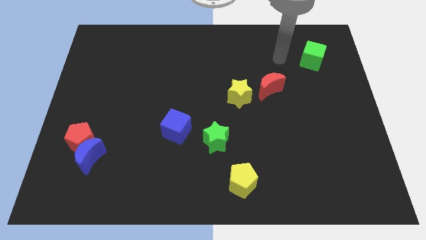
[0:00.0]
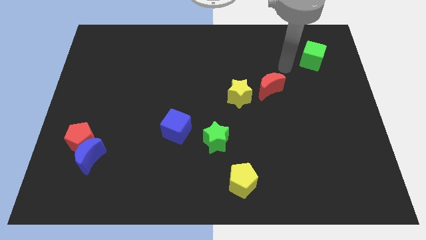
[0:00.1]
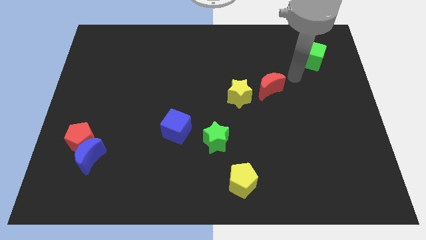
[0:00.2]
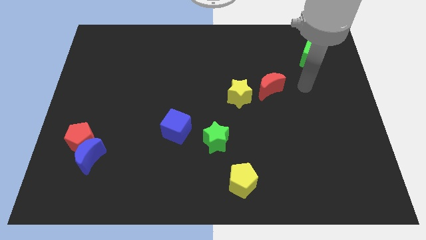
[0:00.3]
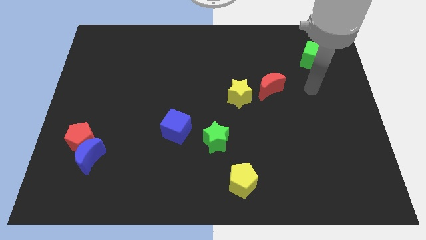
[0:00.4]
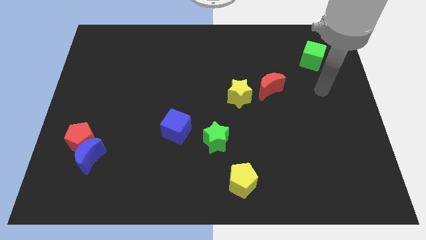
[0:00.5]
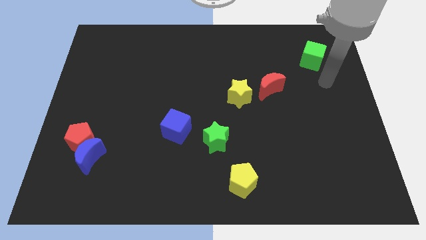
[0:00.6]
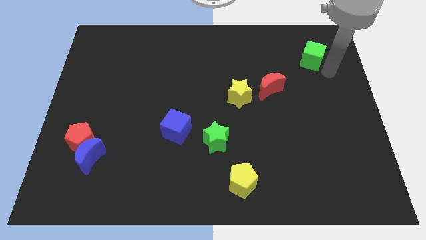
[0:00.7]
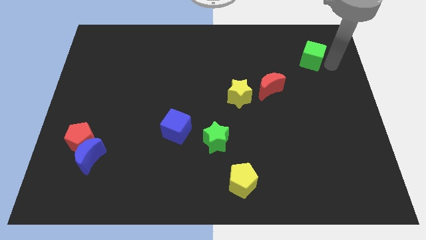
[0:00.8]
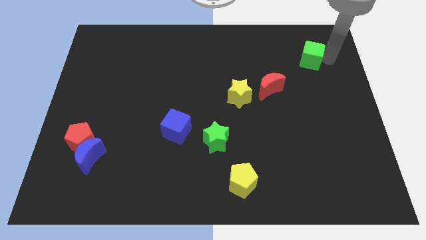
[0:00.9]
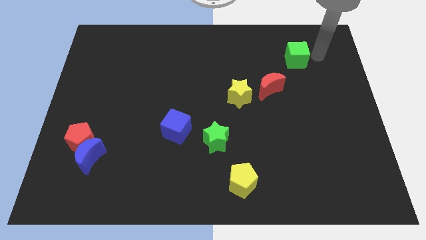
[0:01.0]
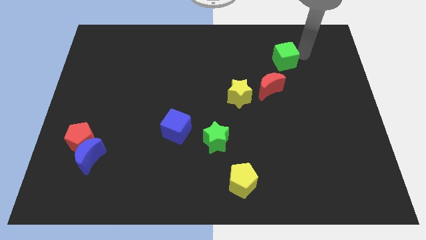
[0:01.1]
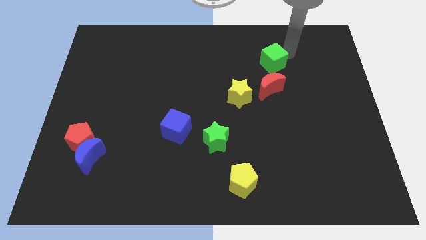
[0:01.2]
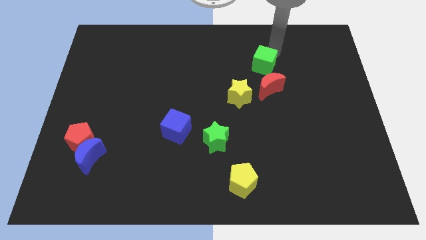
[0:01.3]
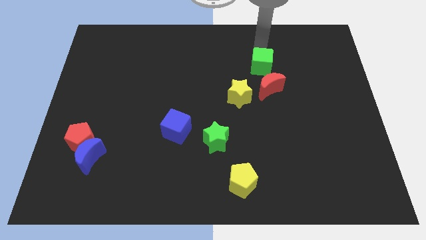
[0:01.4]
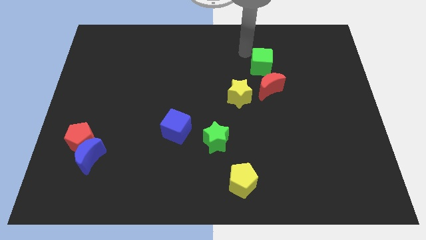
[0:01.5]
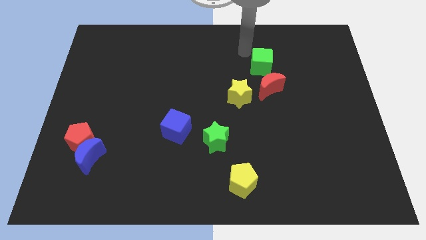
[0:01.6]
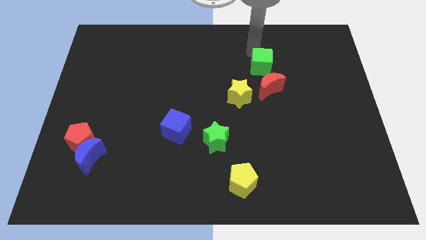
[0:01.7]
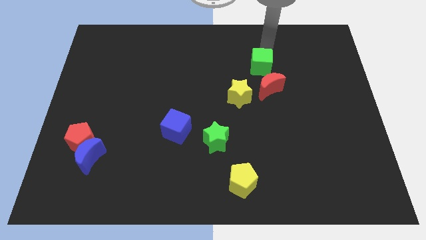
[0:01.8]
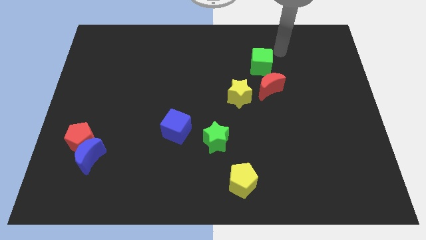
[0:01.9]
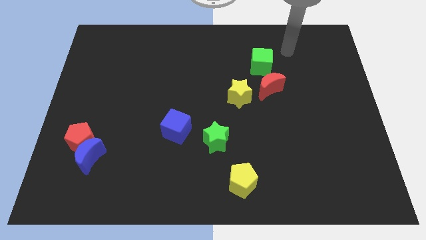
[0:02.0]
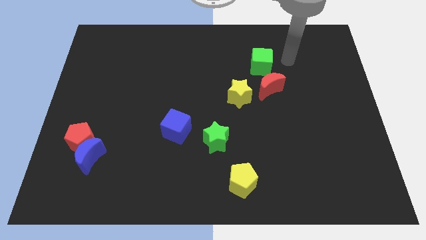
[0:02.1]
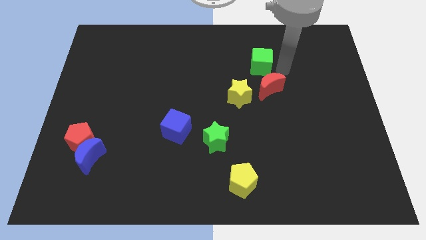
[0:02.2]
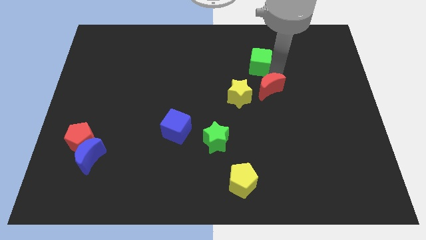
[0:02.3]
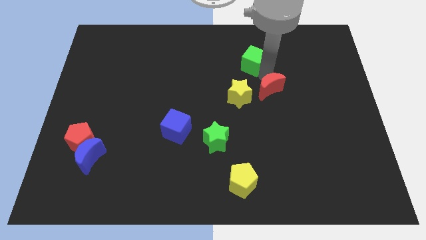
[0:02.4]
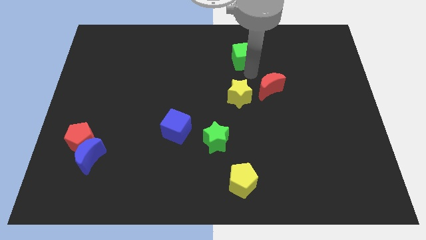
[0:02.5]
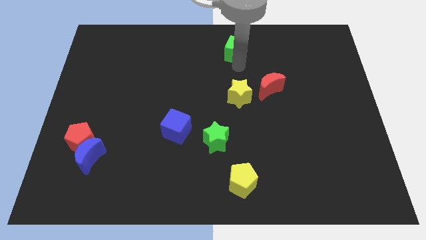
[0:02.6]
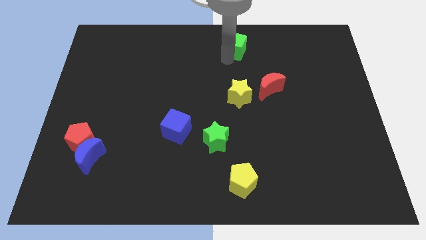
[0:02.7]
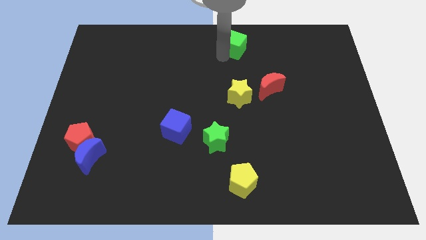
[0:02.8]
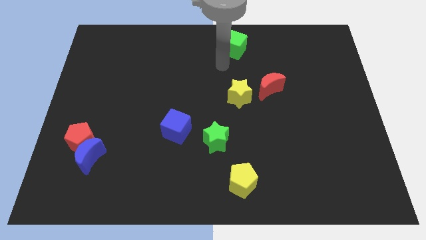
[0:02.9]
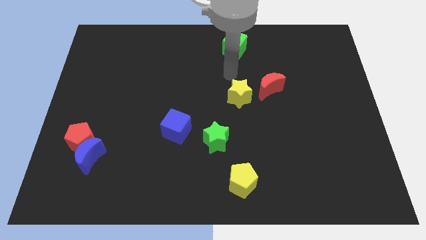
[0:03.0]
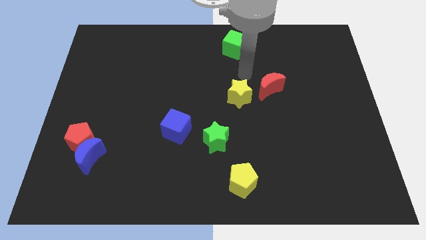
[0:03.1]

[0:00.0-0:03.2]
place green star vertical to yellow star

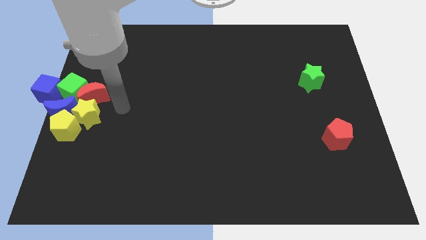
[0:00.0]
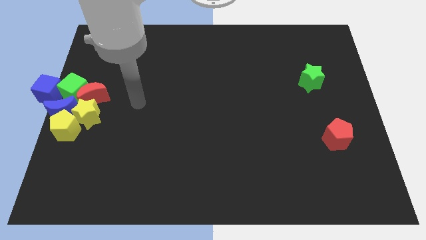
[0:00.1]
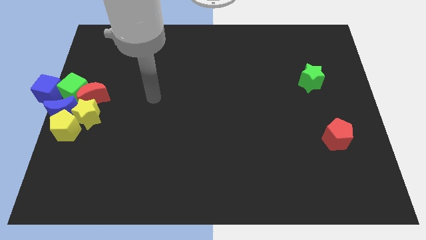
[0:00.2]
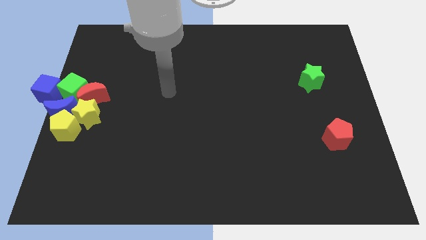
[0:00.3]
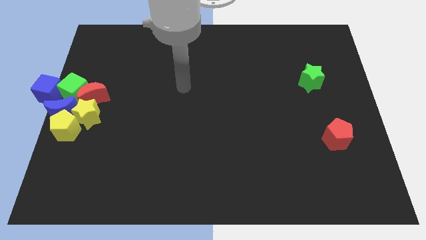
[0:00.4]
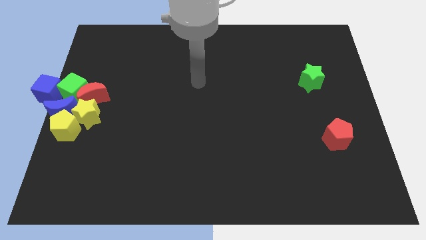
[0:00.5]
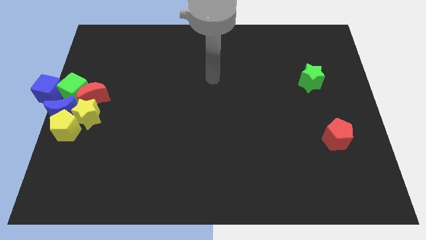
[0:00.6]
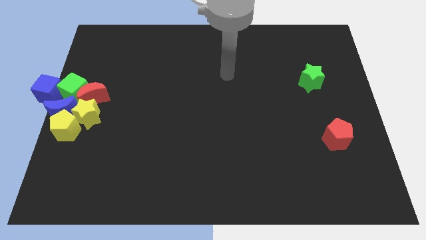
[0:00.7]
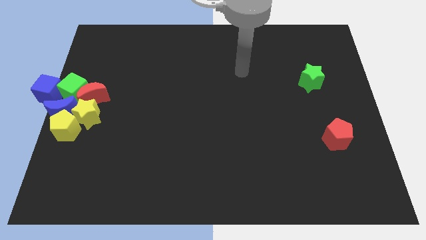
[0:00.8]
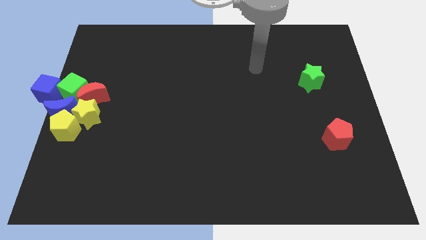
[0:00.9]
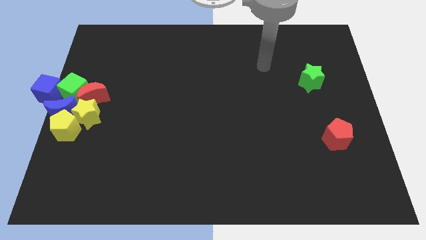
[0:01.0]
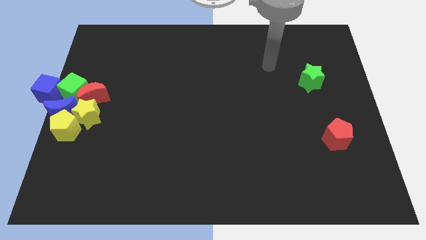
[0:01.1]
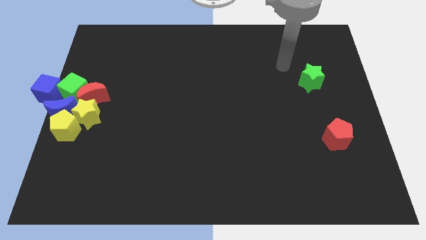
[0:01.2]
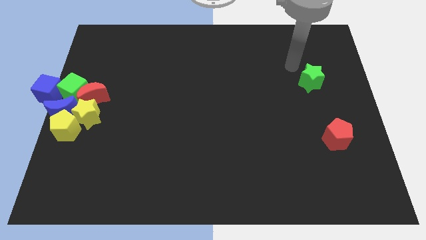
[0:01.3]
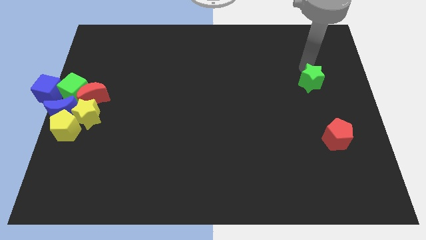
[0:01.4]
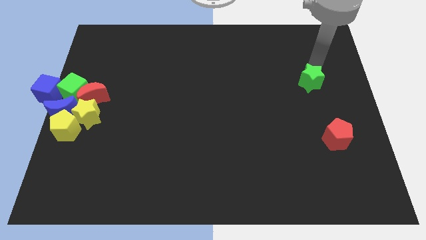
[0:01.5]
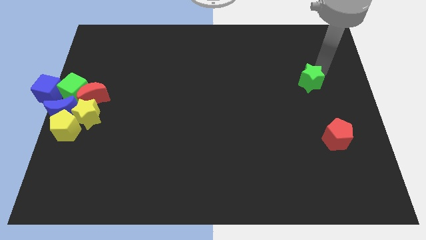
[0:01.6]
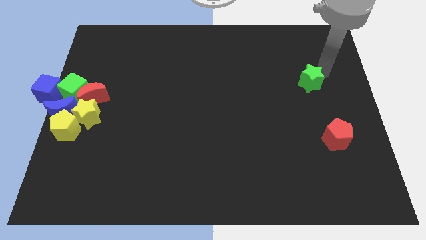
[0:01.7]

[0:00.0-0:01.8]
move your arm towards the green star

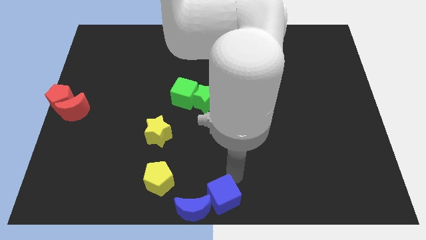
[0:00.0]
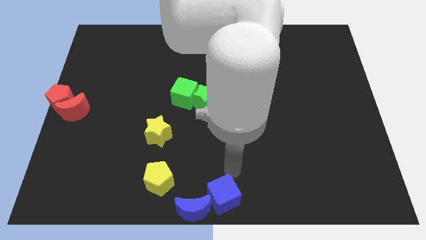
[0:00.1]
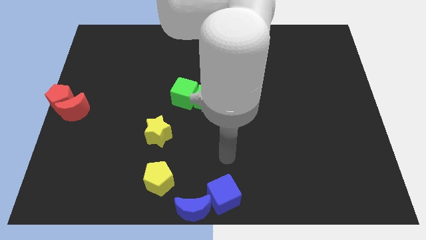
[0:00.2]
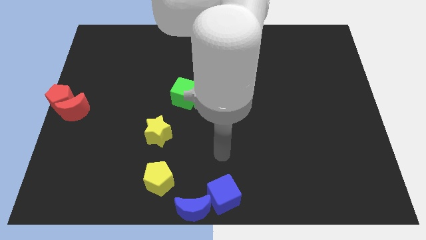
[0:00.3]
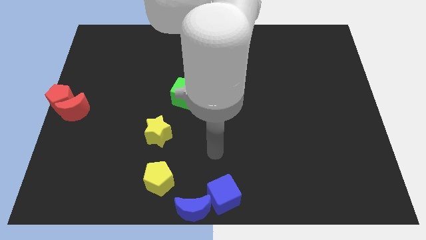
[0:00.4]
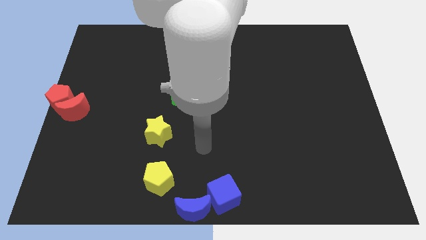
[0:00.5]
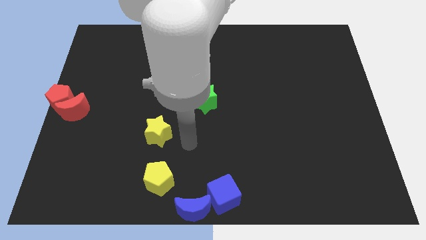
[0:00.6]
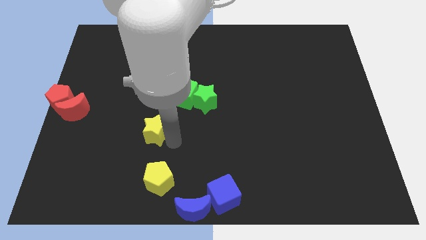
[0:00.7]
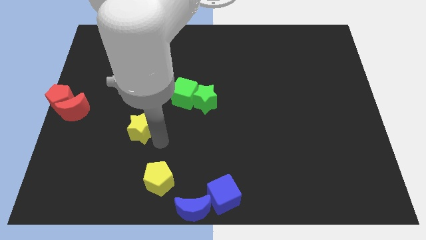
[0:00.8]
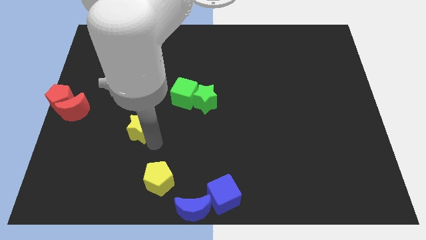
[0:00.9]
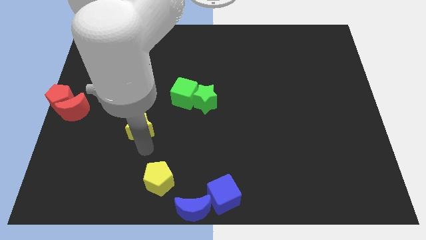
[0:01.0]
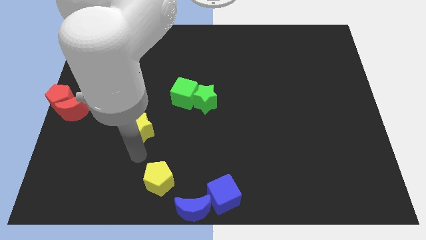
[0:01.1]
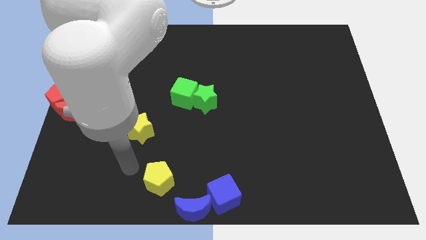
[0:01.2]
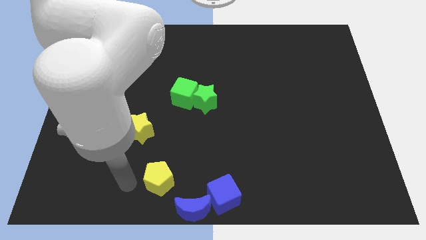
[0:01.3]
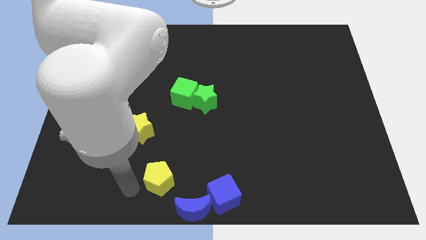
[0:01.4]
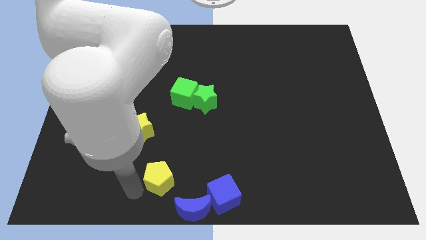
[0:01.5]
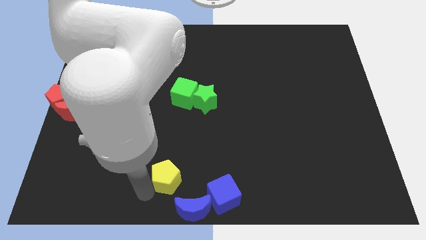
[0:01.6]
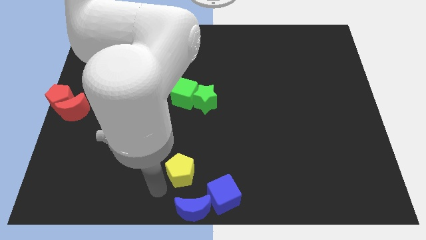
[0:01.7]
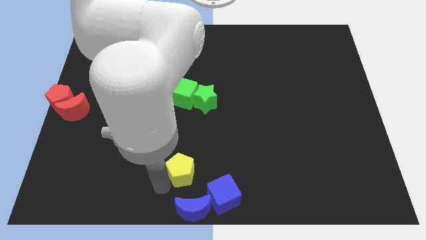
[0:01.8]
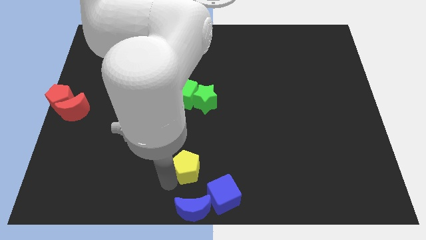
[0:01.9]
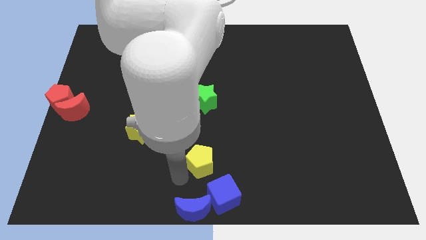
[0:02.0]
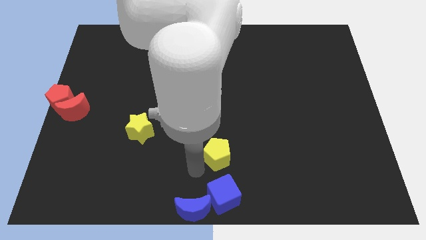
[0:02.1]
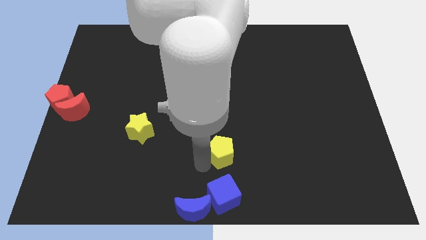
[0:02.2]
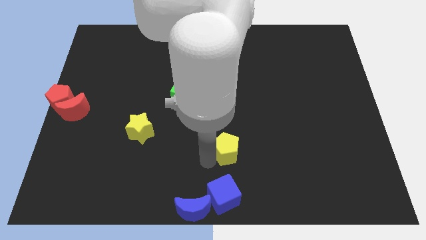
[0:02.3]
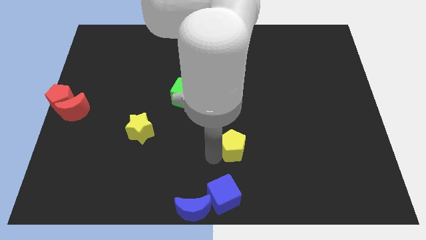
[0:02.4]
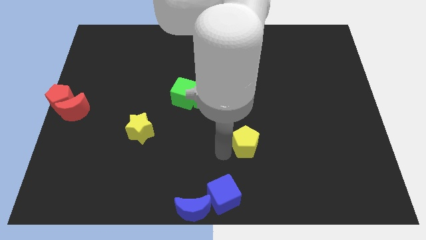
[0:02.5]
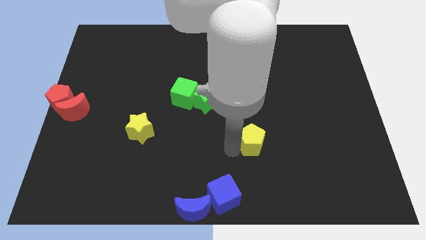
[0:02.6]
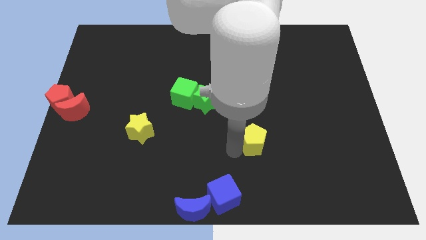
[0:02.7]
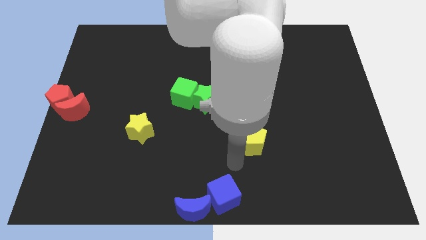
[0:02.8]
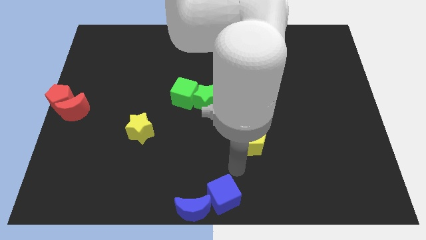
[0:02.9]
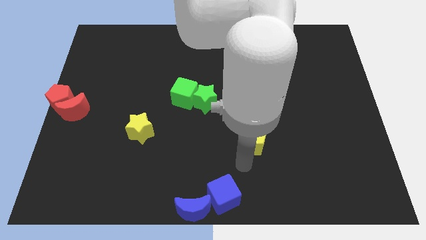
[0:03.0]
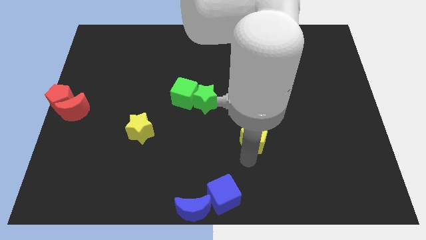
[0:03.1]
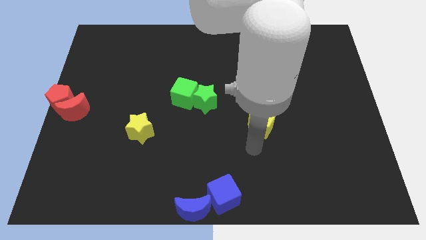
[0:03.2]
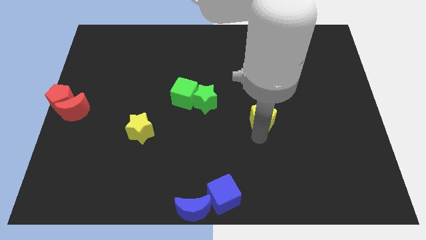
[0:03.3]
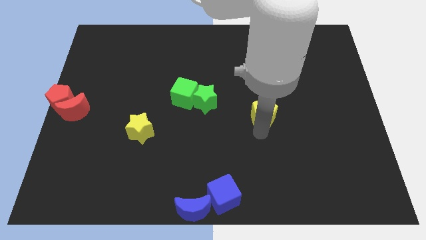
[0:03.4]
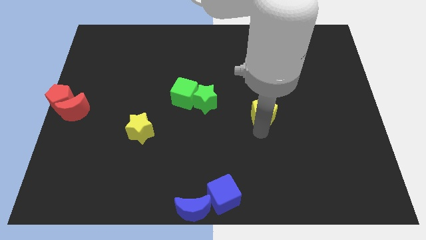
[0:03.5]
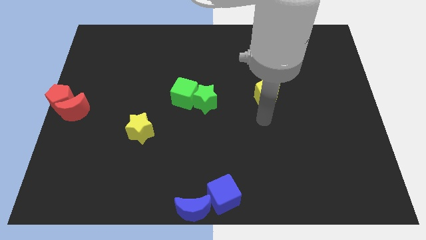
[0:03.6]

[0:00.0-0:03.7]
push the yellow pentagon diagonal to the right side of the green star

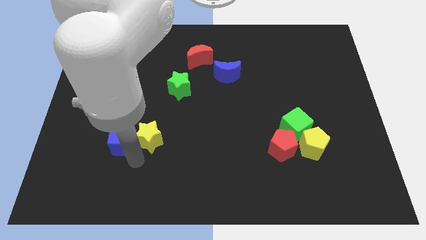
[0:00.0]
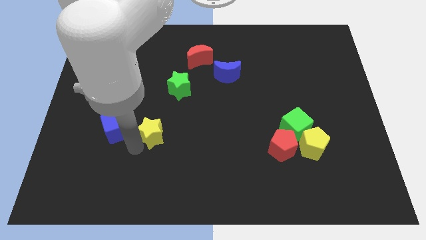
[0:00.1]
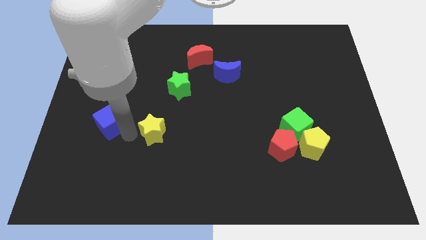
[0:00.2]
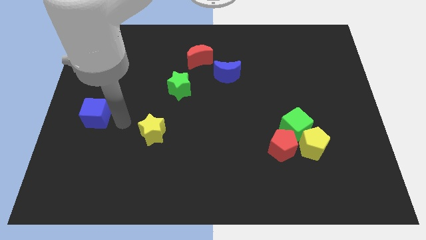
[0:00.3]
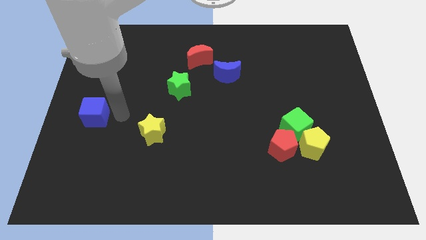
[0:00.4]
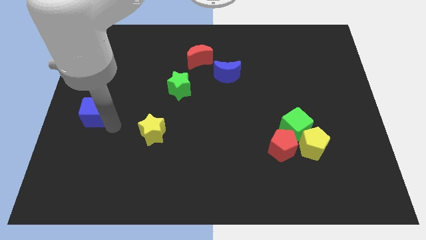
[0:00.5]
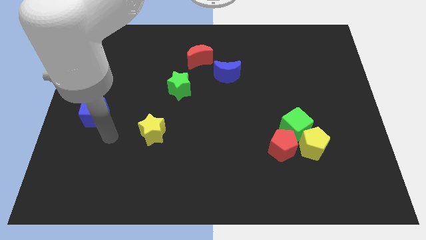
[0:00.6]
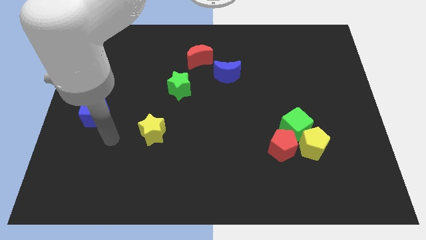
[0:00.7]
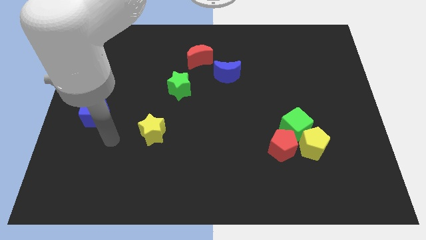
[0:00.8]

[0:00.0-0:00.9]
separate blue cube and yellow star
